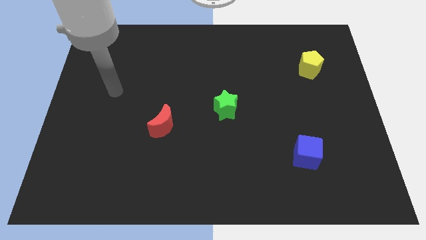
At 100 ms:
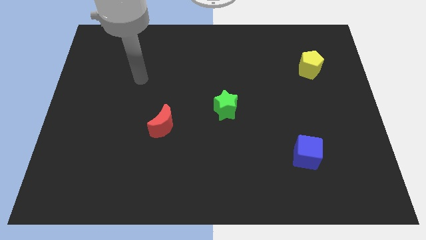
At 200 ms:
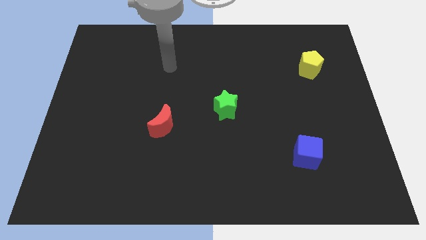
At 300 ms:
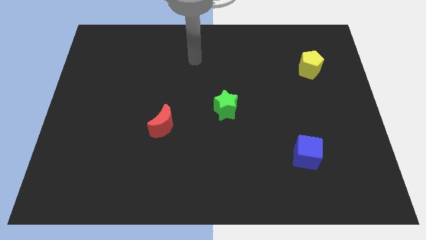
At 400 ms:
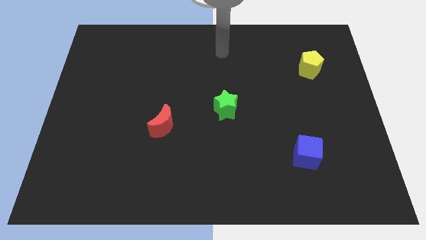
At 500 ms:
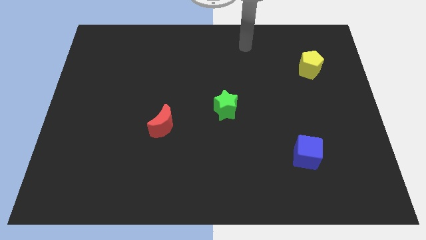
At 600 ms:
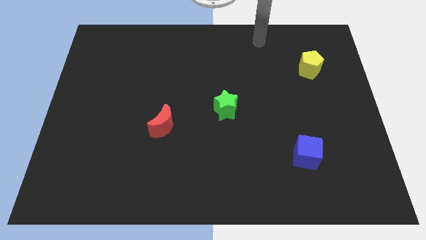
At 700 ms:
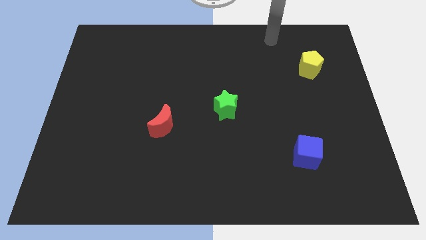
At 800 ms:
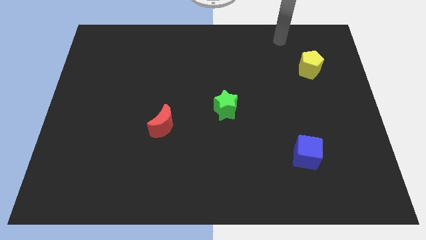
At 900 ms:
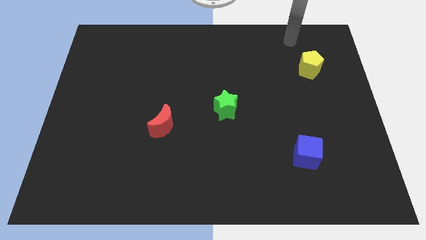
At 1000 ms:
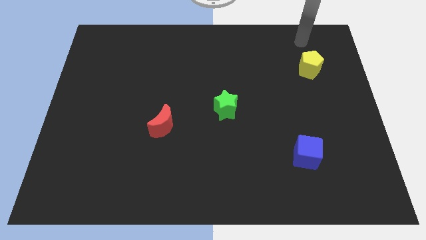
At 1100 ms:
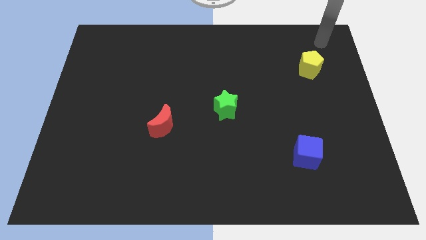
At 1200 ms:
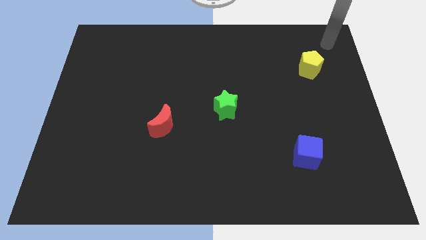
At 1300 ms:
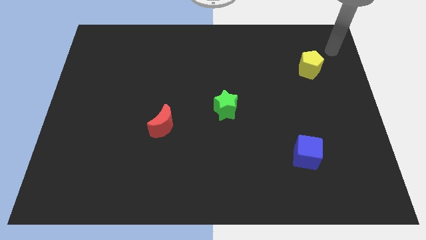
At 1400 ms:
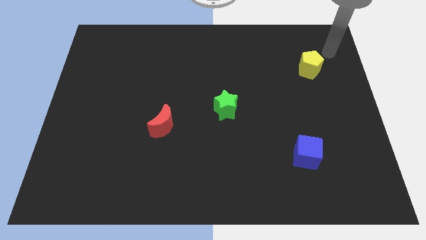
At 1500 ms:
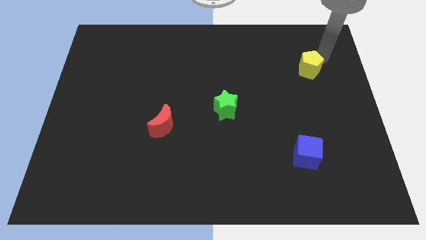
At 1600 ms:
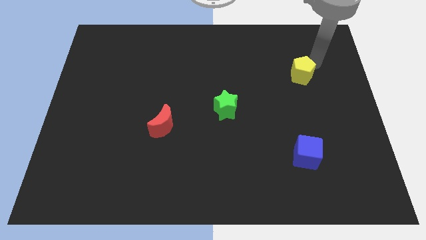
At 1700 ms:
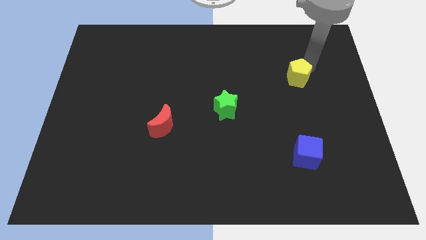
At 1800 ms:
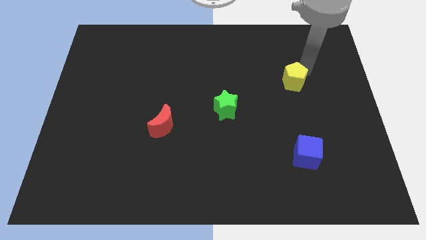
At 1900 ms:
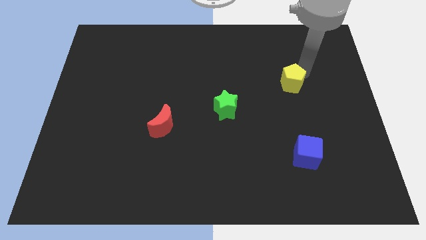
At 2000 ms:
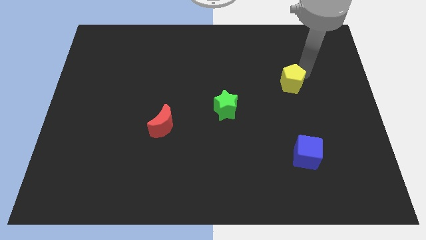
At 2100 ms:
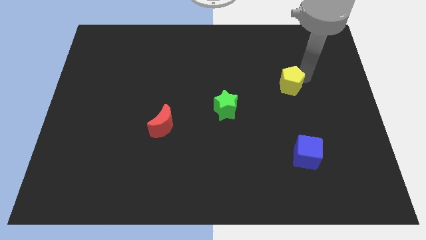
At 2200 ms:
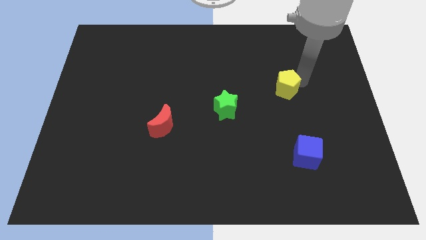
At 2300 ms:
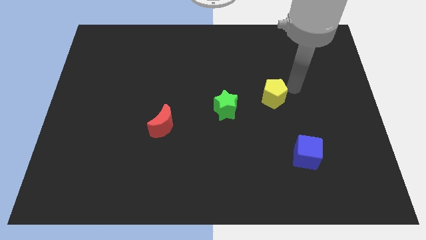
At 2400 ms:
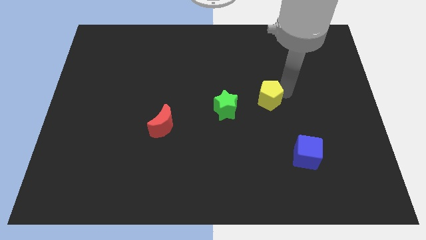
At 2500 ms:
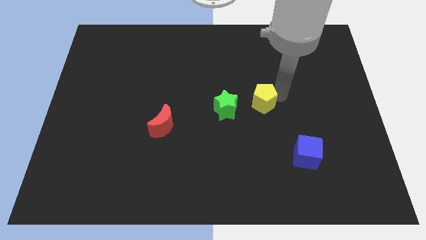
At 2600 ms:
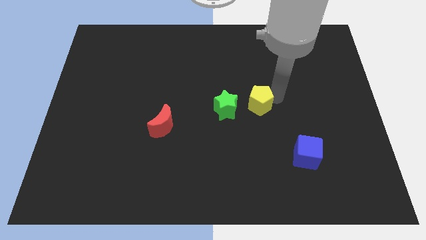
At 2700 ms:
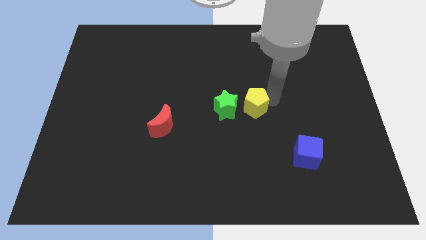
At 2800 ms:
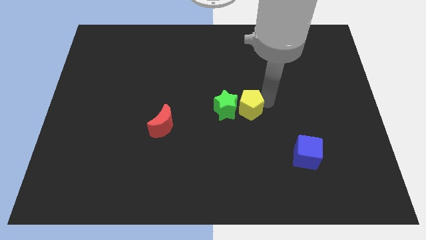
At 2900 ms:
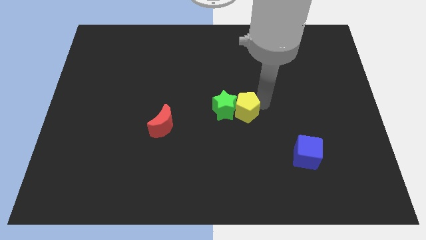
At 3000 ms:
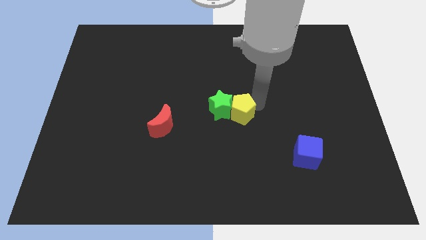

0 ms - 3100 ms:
put the yellow pentagon to the green star

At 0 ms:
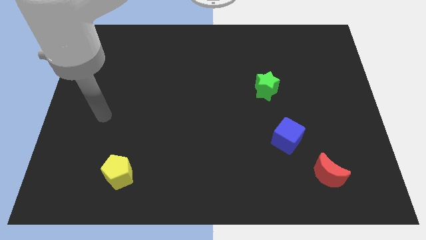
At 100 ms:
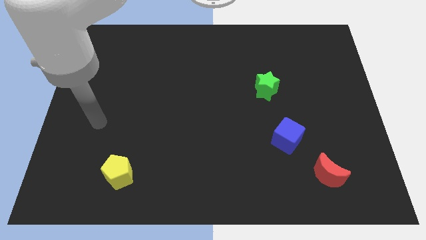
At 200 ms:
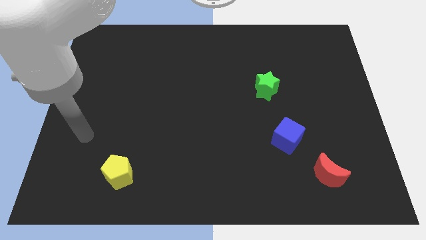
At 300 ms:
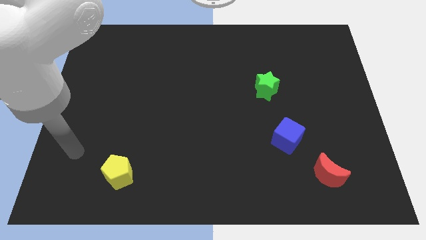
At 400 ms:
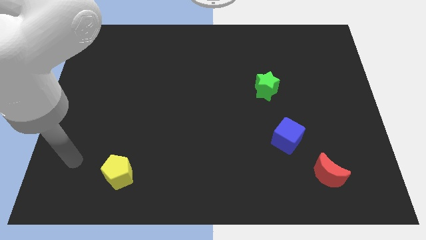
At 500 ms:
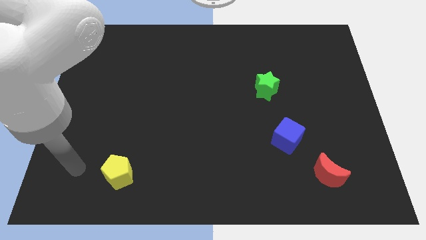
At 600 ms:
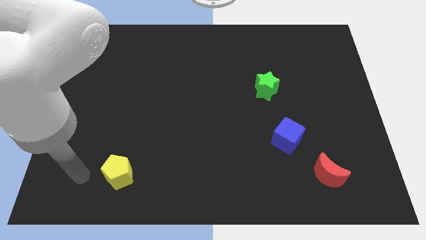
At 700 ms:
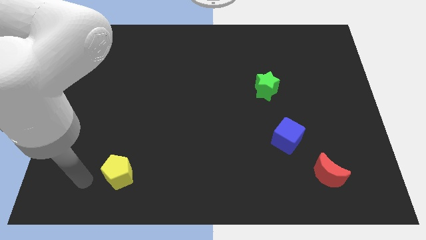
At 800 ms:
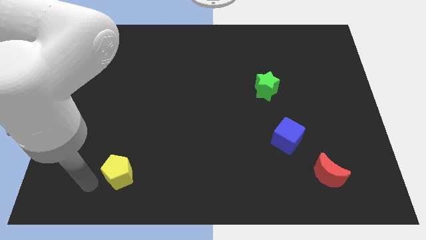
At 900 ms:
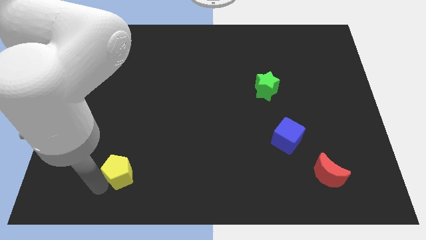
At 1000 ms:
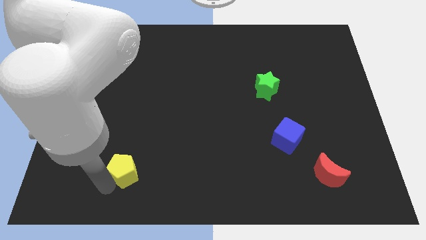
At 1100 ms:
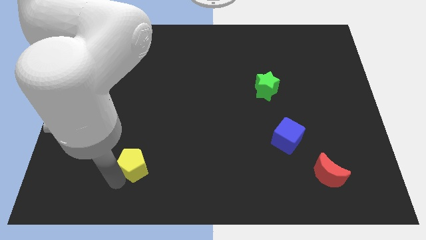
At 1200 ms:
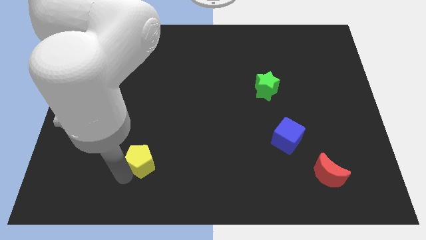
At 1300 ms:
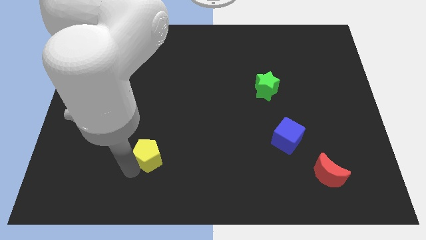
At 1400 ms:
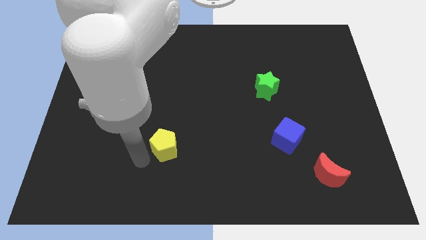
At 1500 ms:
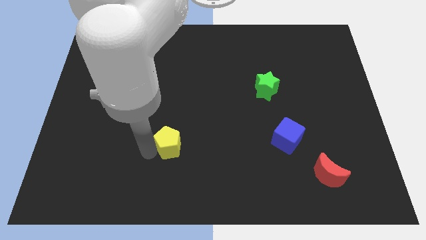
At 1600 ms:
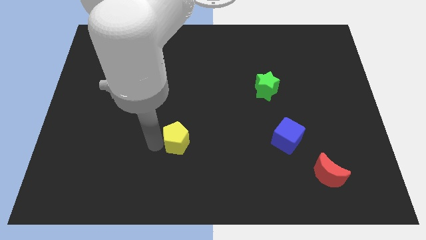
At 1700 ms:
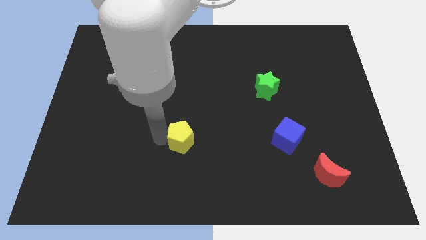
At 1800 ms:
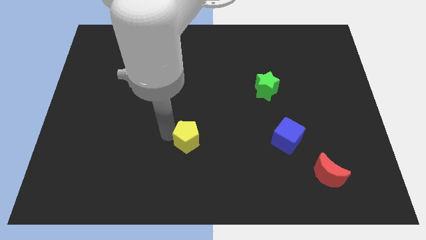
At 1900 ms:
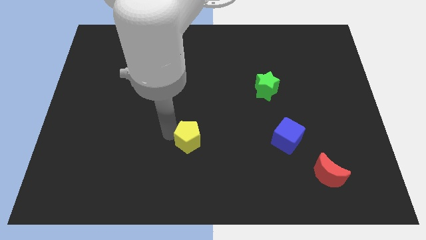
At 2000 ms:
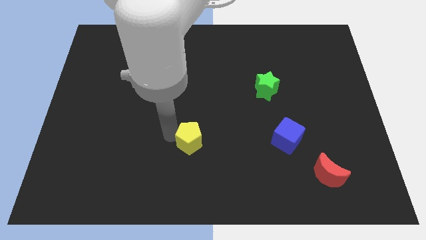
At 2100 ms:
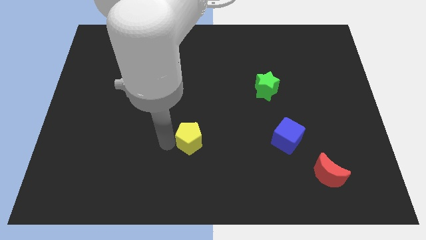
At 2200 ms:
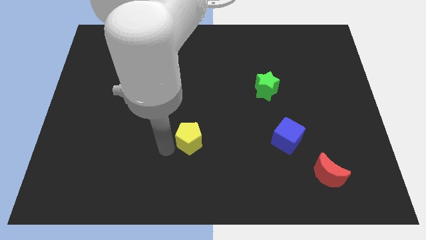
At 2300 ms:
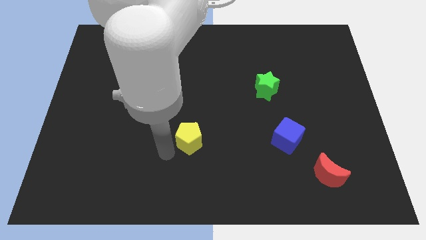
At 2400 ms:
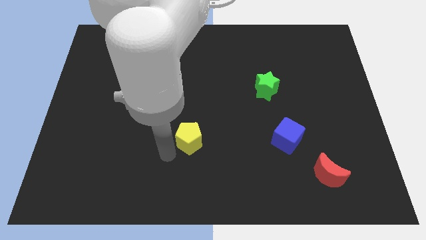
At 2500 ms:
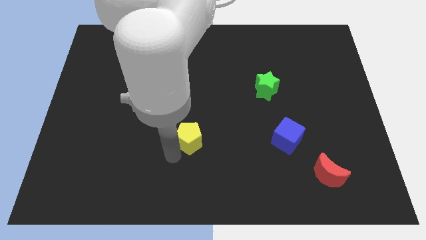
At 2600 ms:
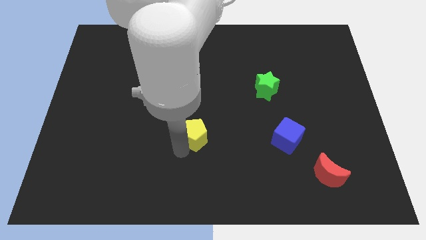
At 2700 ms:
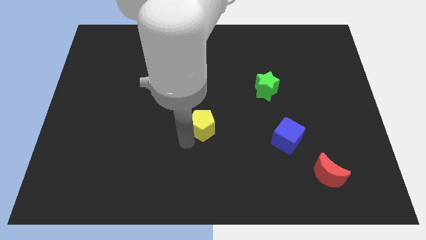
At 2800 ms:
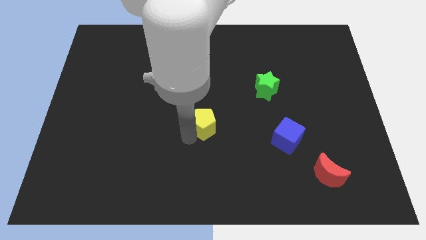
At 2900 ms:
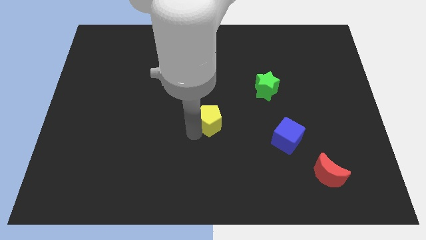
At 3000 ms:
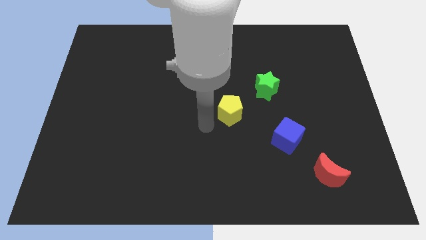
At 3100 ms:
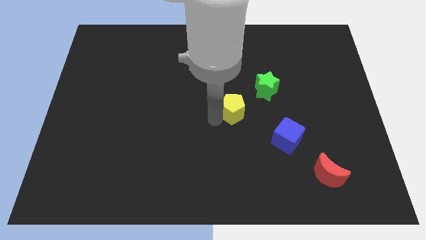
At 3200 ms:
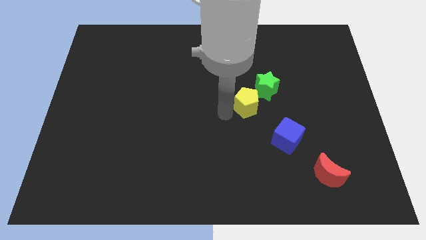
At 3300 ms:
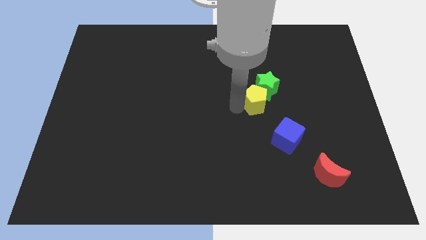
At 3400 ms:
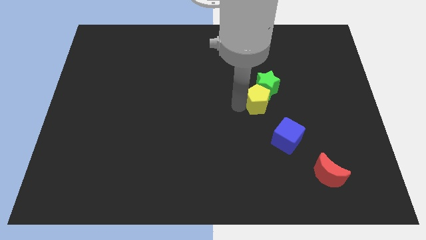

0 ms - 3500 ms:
put the yellow block towards the green block

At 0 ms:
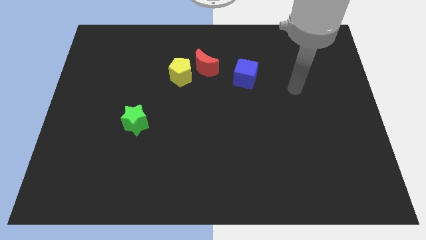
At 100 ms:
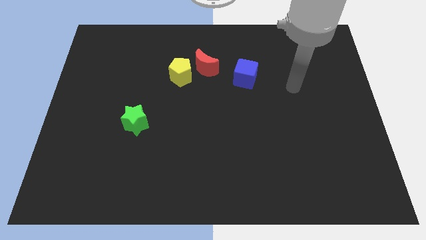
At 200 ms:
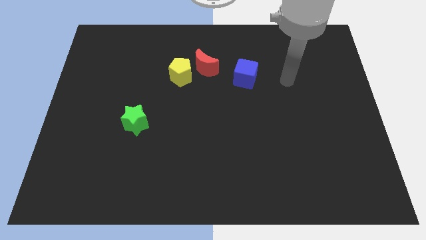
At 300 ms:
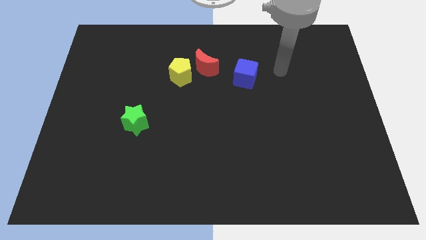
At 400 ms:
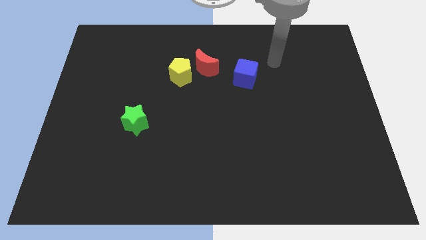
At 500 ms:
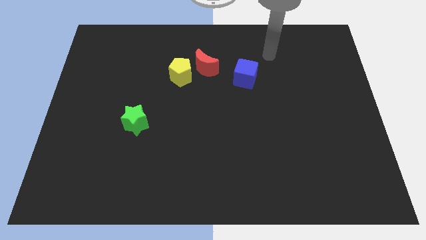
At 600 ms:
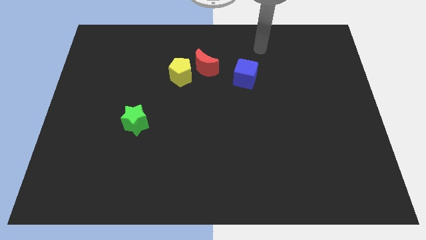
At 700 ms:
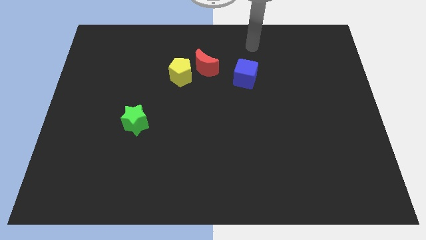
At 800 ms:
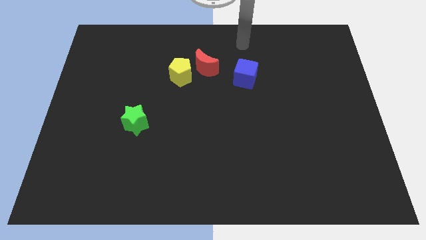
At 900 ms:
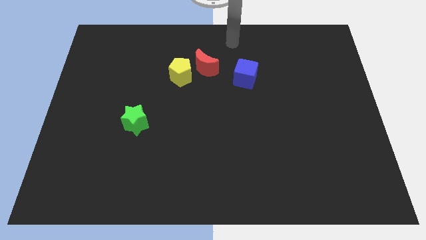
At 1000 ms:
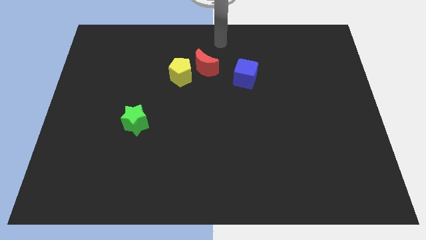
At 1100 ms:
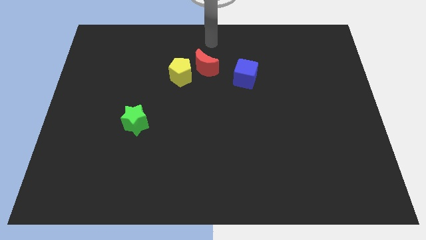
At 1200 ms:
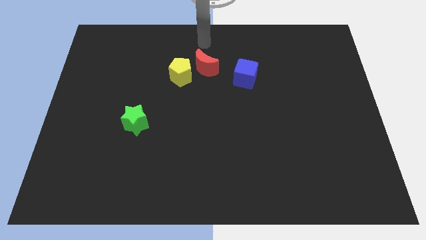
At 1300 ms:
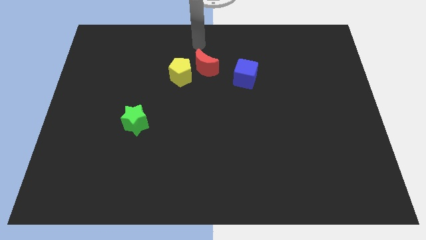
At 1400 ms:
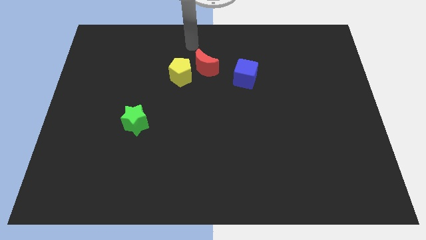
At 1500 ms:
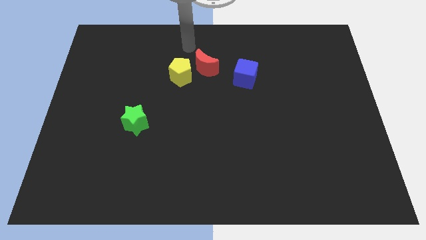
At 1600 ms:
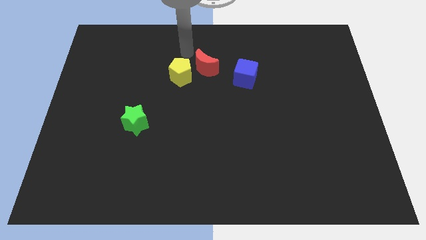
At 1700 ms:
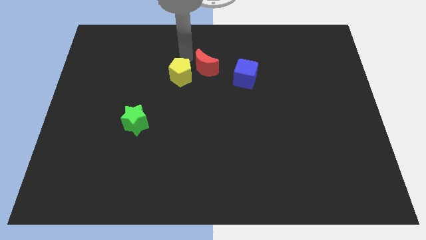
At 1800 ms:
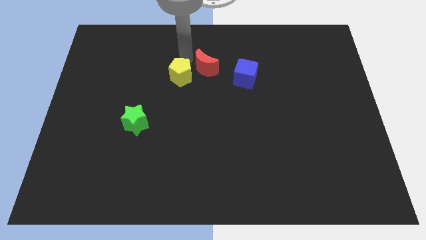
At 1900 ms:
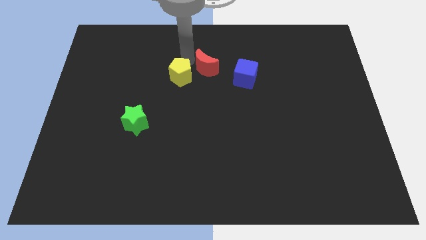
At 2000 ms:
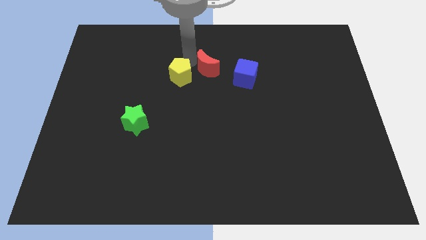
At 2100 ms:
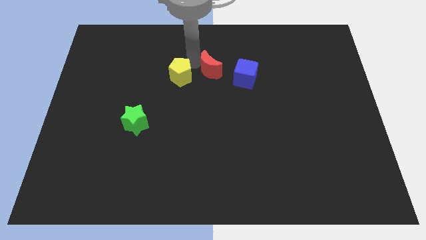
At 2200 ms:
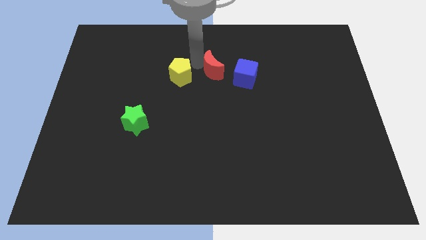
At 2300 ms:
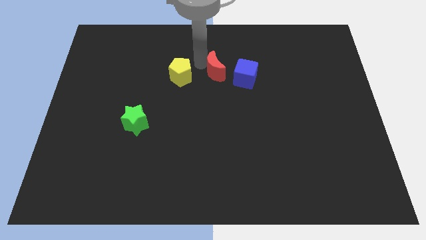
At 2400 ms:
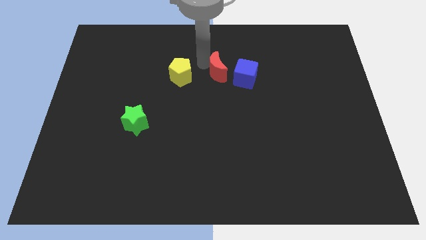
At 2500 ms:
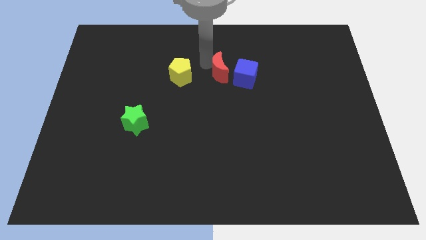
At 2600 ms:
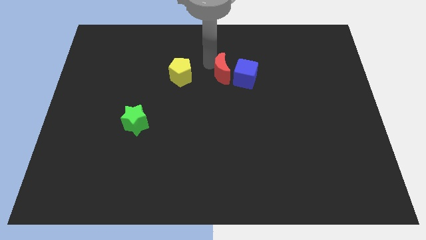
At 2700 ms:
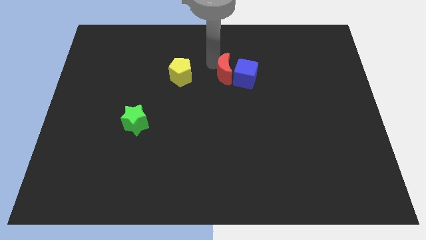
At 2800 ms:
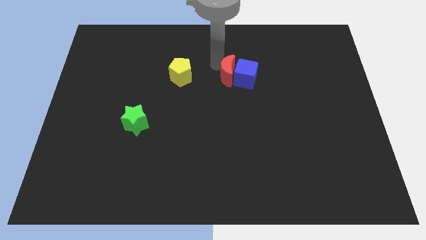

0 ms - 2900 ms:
put the red block to the blue cube
